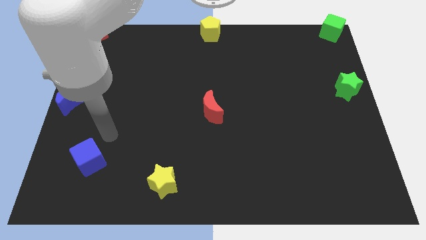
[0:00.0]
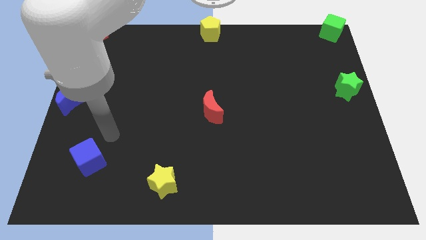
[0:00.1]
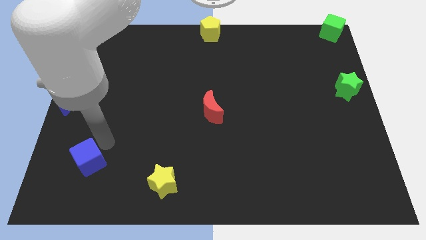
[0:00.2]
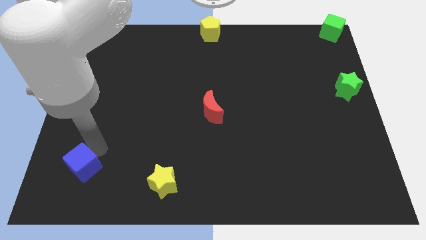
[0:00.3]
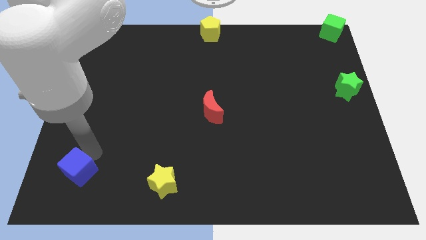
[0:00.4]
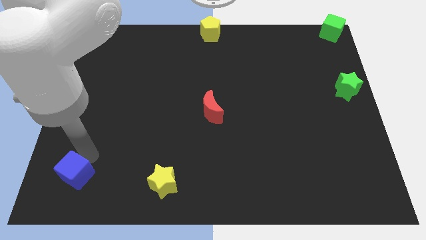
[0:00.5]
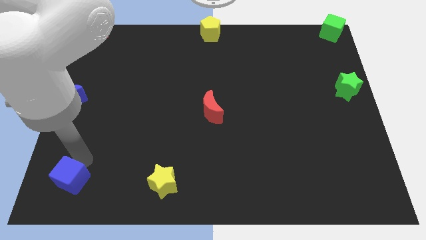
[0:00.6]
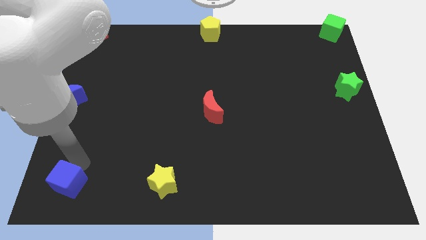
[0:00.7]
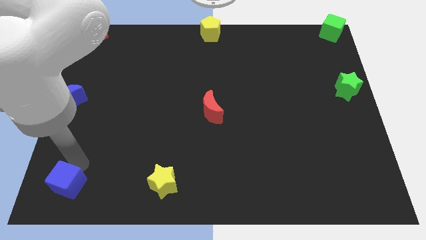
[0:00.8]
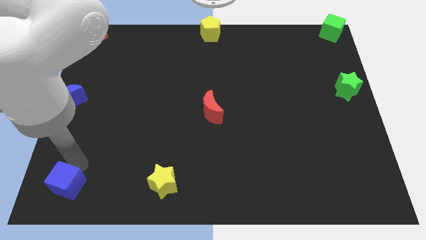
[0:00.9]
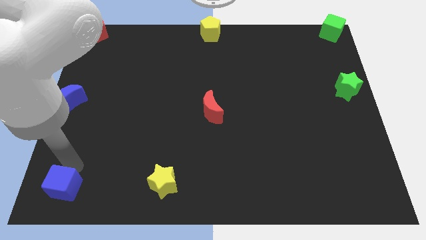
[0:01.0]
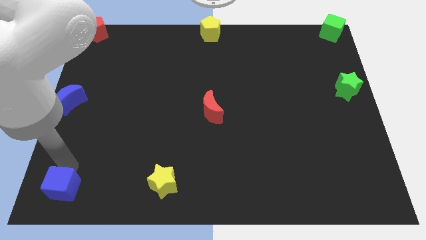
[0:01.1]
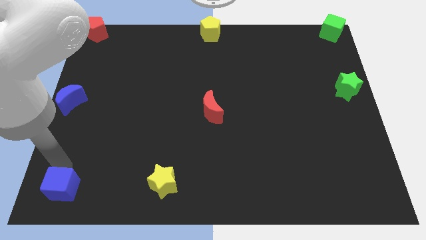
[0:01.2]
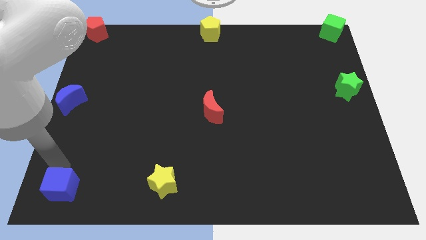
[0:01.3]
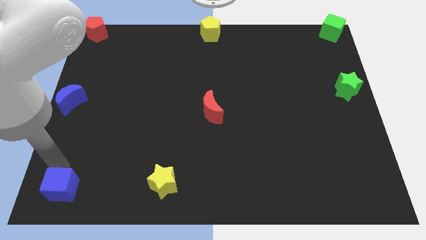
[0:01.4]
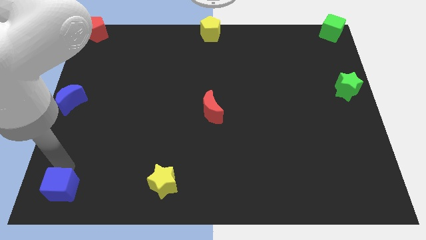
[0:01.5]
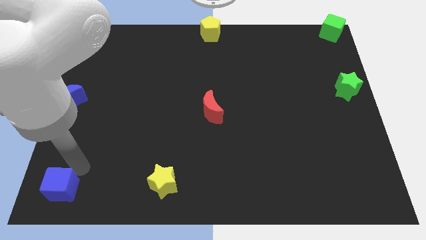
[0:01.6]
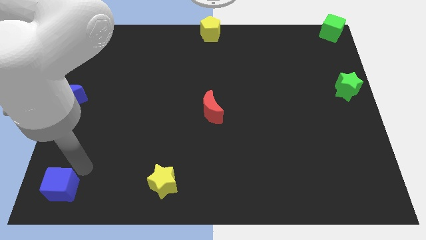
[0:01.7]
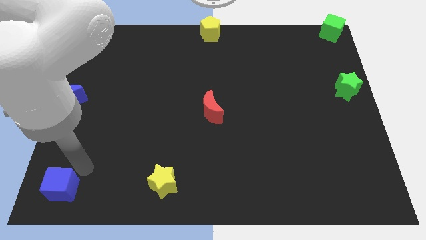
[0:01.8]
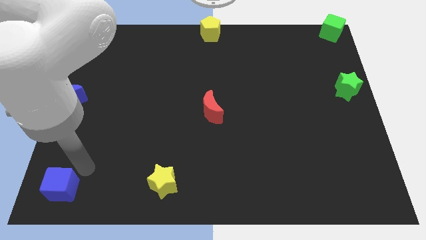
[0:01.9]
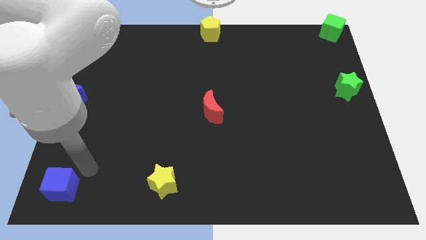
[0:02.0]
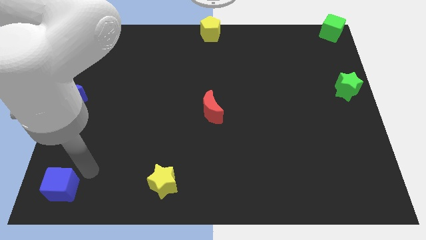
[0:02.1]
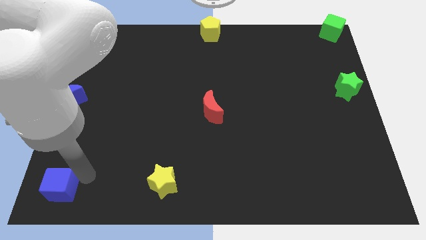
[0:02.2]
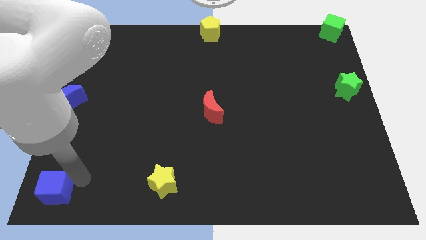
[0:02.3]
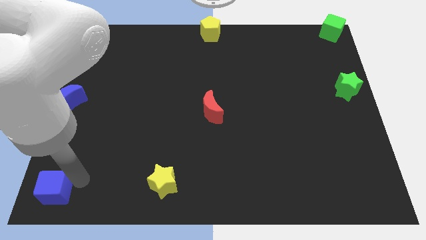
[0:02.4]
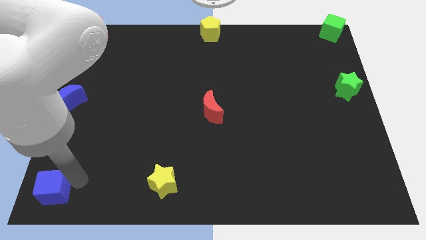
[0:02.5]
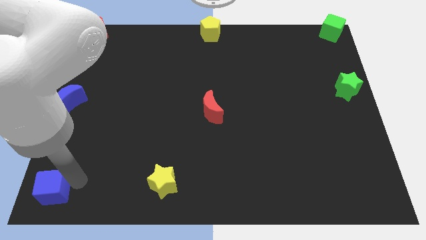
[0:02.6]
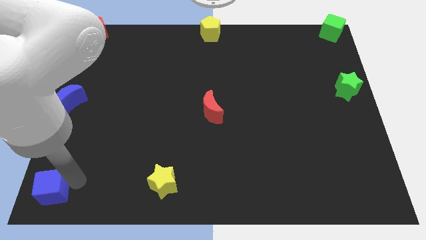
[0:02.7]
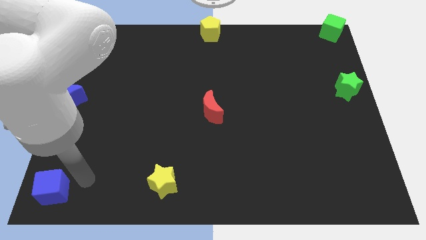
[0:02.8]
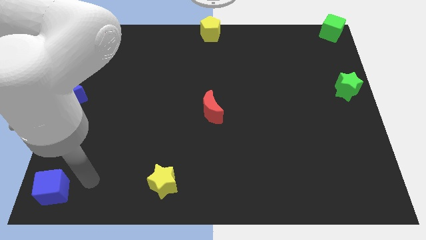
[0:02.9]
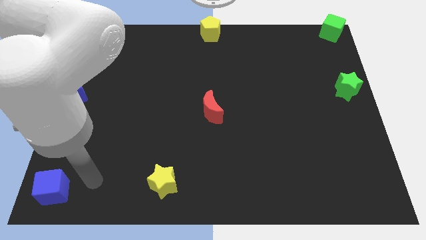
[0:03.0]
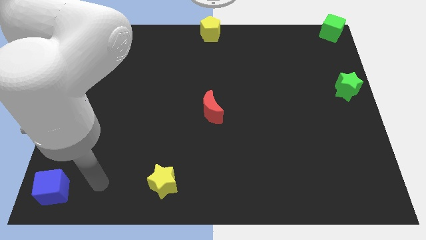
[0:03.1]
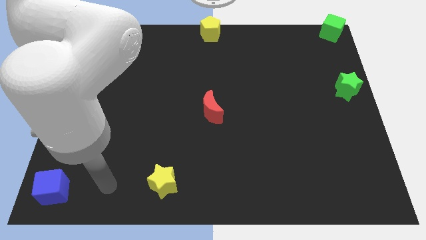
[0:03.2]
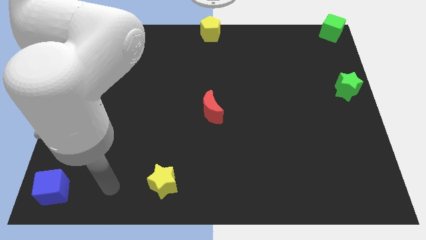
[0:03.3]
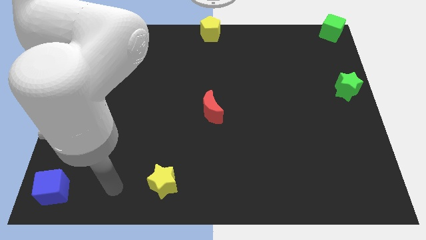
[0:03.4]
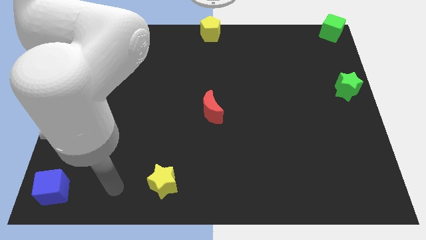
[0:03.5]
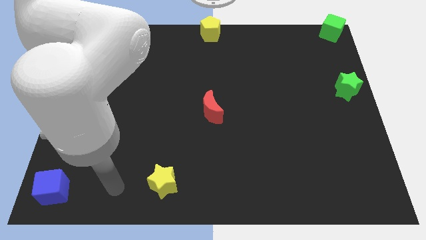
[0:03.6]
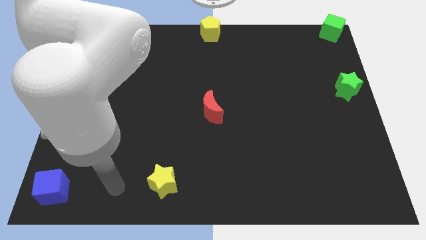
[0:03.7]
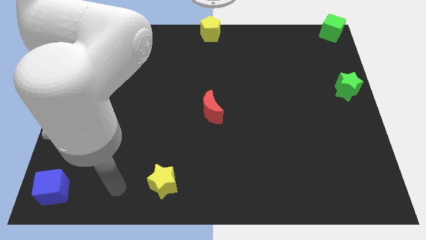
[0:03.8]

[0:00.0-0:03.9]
push the blue cube to the bottom left

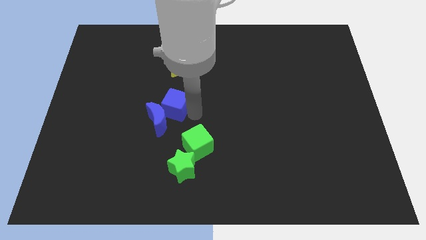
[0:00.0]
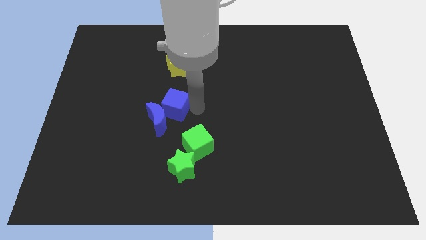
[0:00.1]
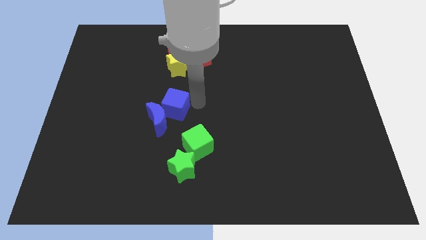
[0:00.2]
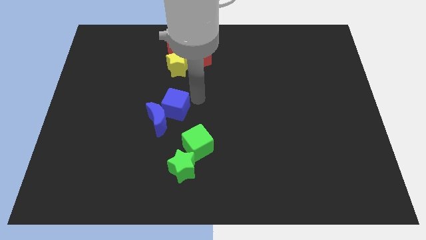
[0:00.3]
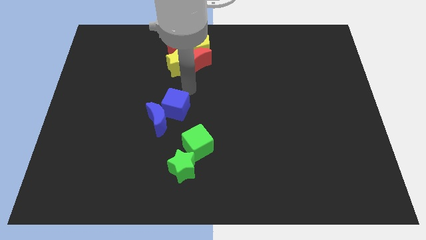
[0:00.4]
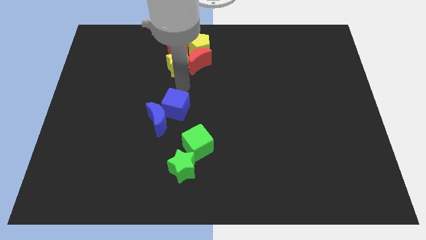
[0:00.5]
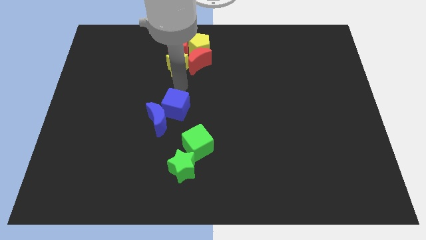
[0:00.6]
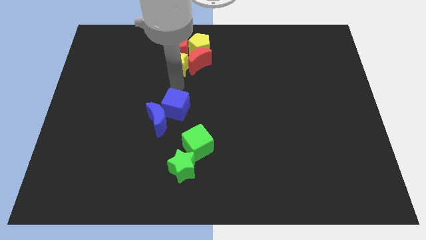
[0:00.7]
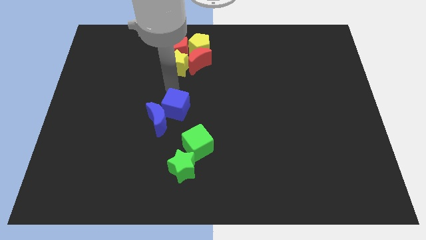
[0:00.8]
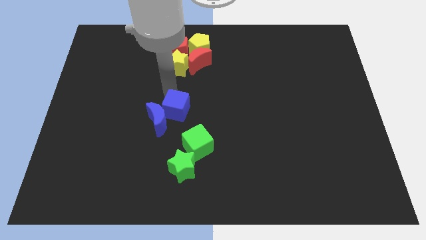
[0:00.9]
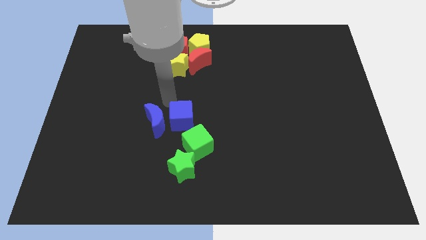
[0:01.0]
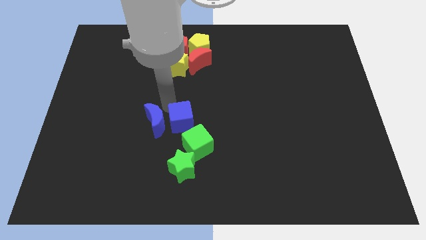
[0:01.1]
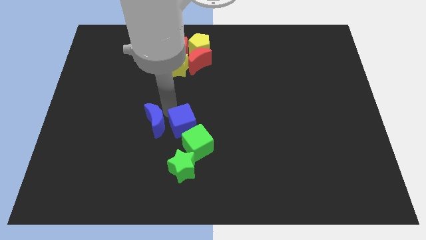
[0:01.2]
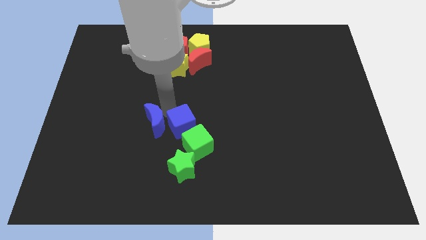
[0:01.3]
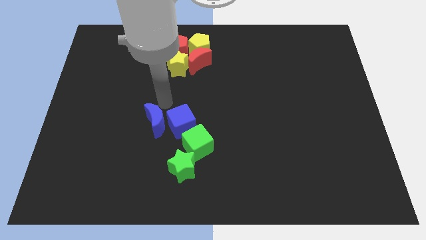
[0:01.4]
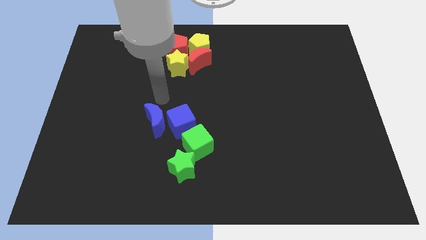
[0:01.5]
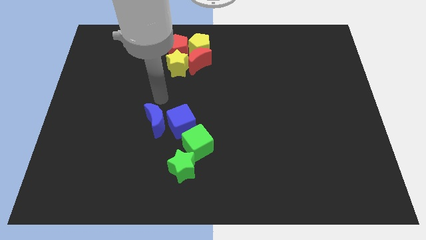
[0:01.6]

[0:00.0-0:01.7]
put the blue cube on the top right of the green cube

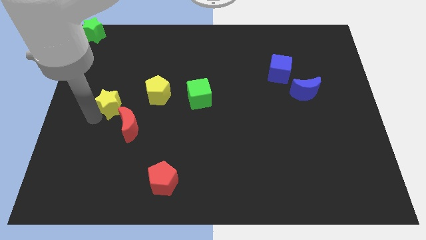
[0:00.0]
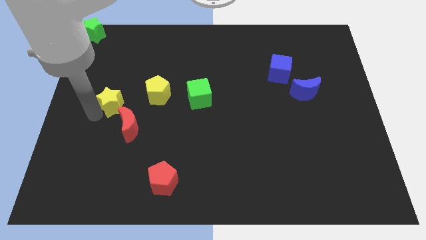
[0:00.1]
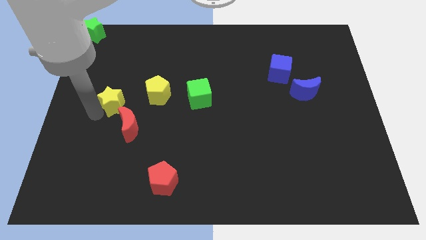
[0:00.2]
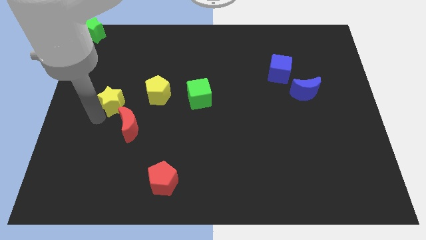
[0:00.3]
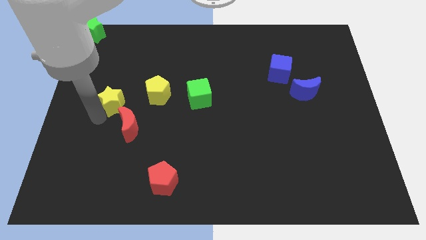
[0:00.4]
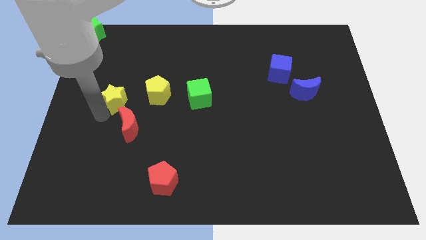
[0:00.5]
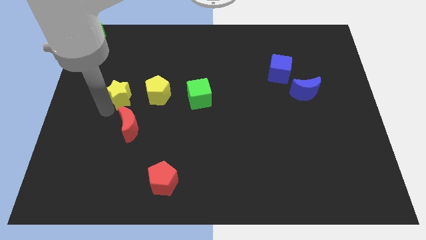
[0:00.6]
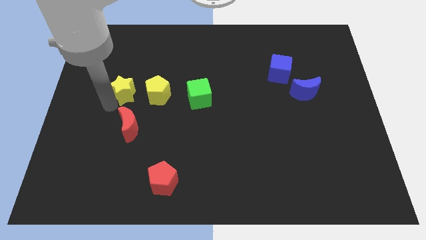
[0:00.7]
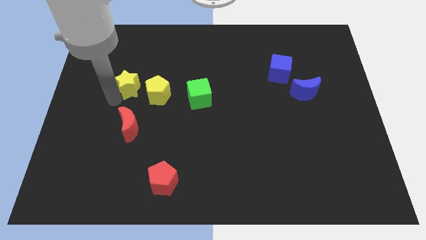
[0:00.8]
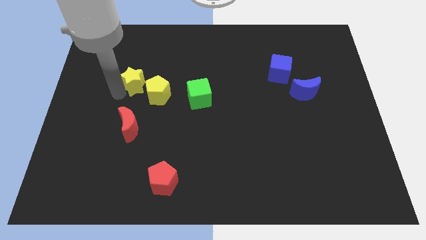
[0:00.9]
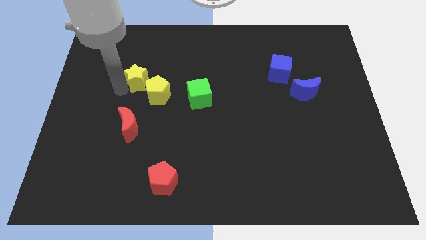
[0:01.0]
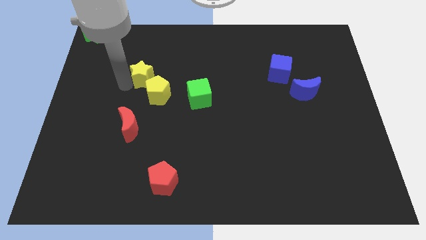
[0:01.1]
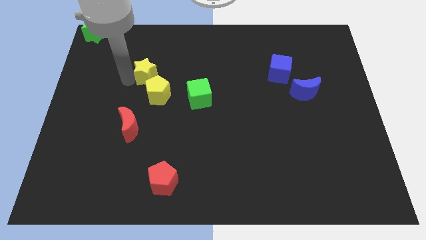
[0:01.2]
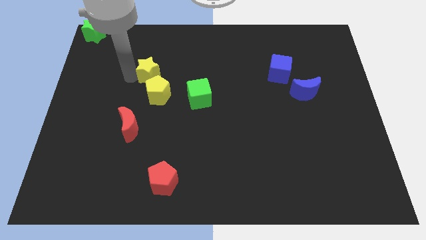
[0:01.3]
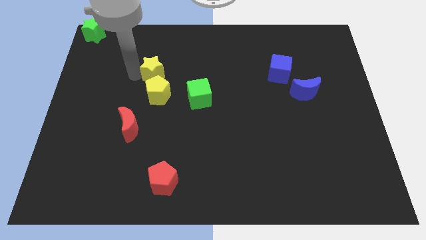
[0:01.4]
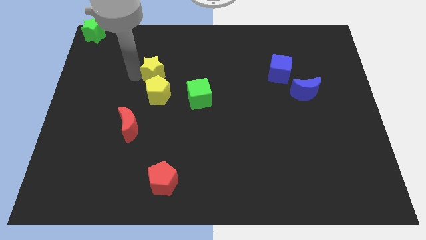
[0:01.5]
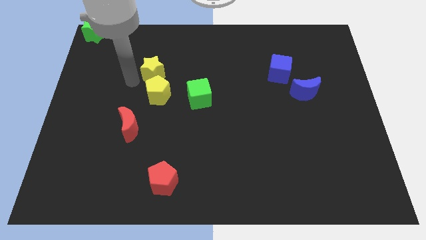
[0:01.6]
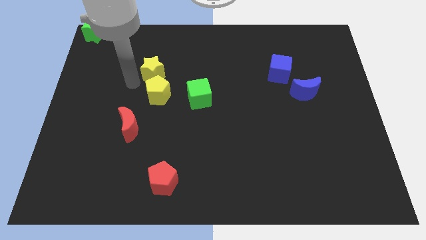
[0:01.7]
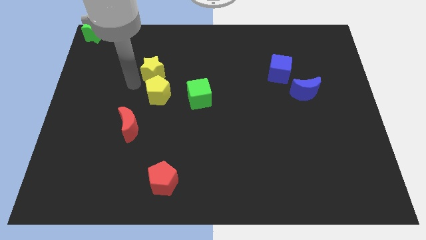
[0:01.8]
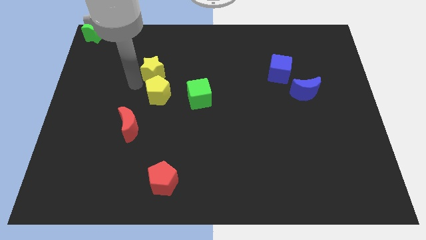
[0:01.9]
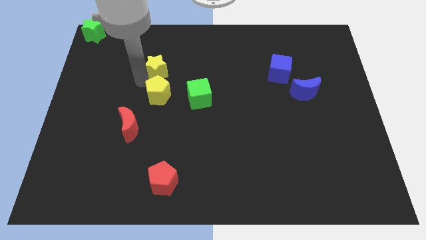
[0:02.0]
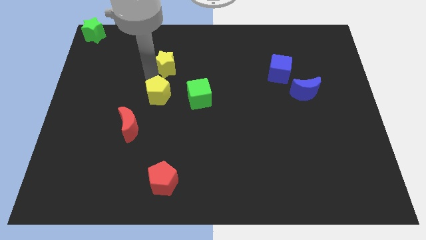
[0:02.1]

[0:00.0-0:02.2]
place the yellow star above the yellow pentagon

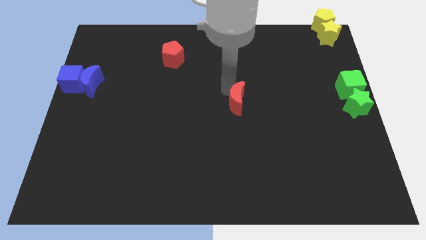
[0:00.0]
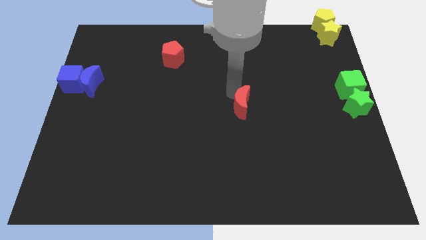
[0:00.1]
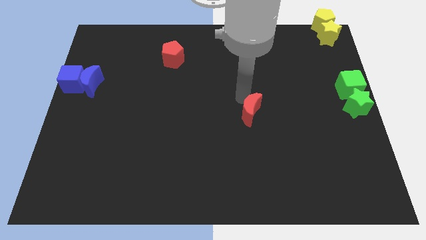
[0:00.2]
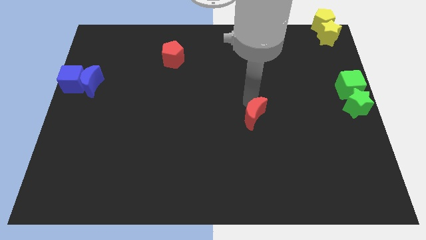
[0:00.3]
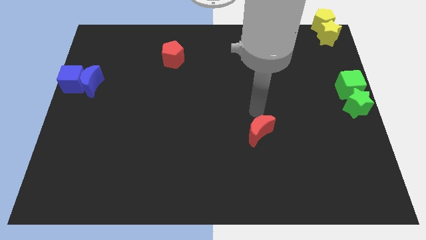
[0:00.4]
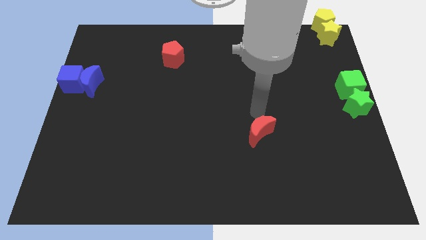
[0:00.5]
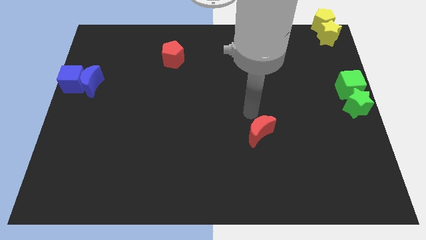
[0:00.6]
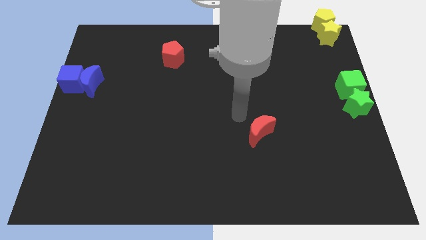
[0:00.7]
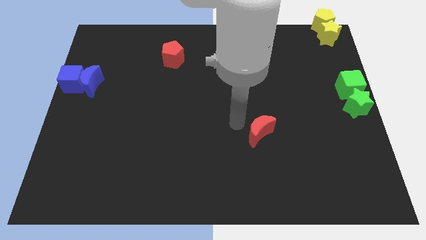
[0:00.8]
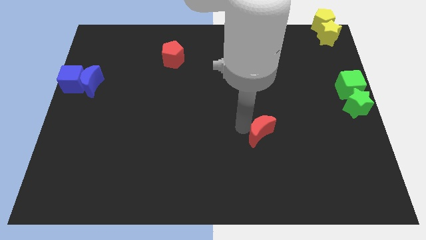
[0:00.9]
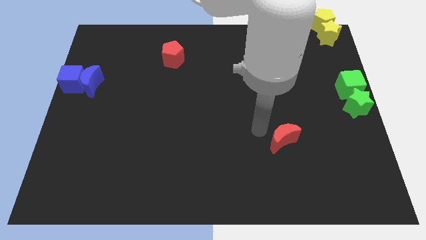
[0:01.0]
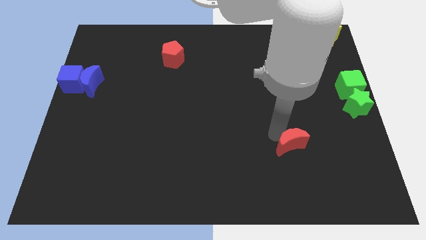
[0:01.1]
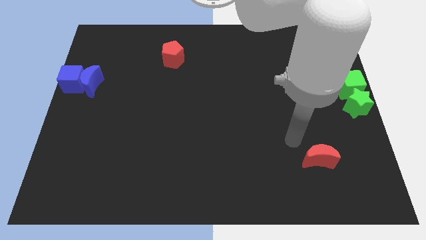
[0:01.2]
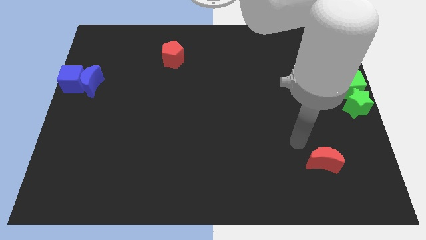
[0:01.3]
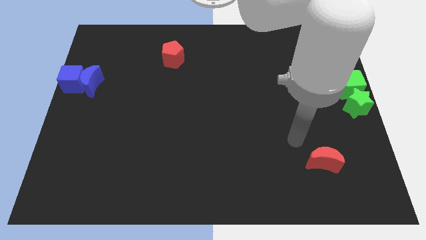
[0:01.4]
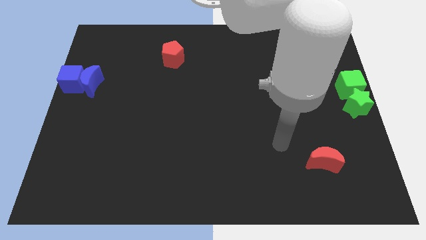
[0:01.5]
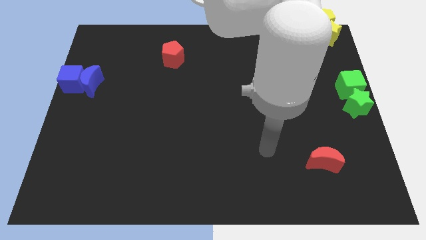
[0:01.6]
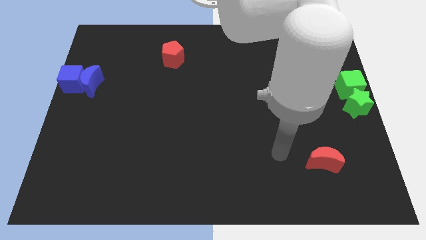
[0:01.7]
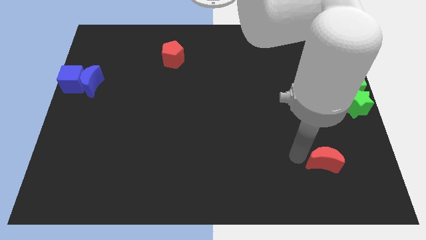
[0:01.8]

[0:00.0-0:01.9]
push the red moon towards the bottom right corner of the board
